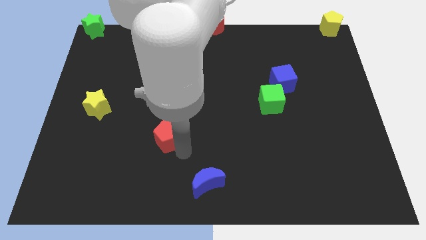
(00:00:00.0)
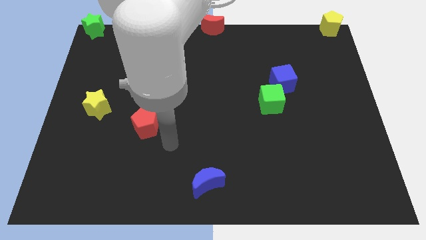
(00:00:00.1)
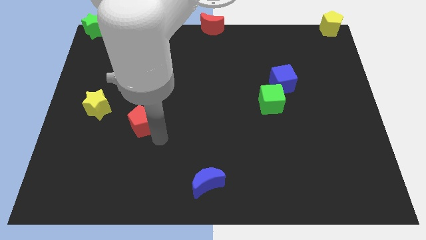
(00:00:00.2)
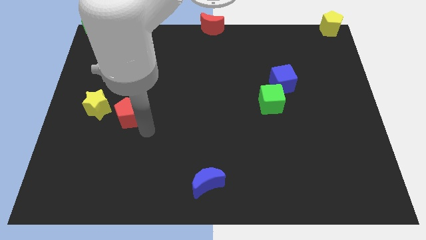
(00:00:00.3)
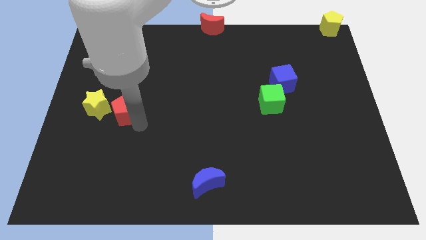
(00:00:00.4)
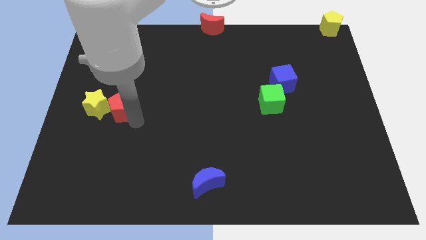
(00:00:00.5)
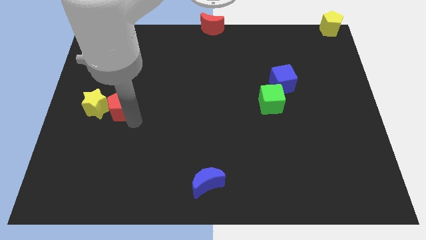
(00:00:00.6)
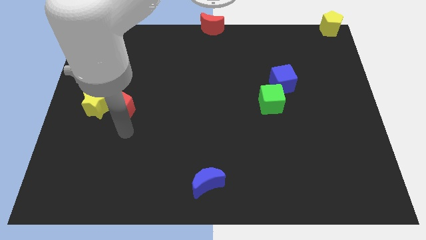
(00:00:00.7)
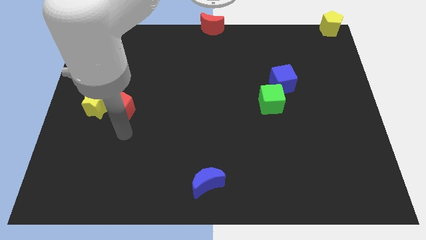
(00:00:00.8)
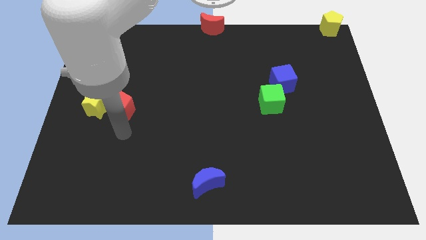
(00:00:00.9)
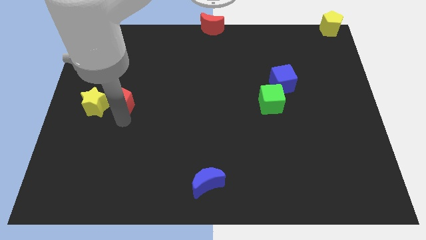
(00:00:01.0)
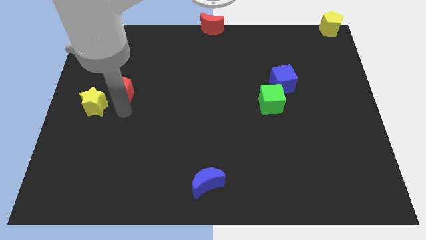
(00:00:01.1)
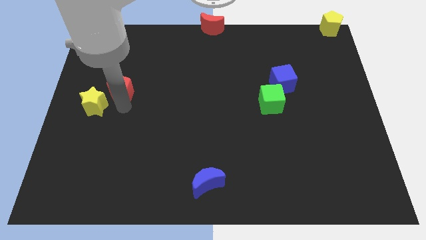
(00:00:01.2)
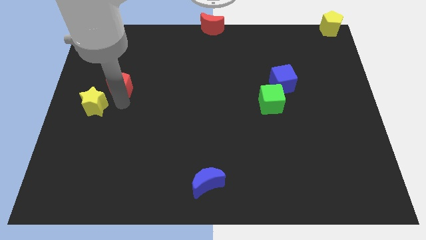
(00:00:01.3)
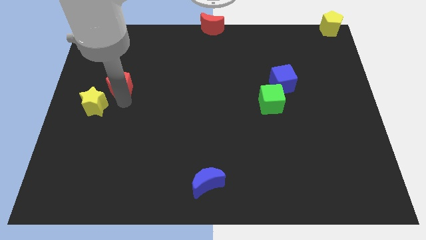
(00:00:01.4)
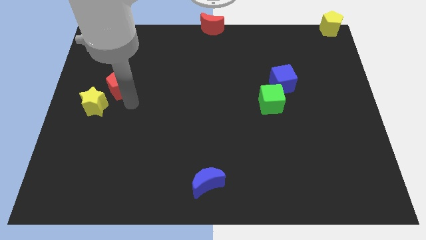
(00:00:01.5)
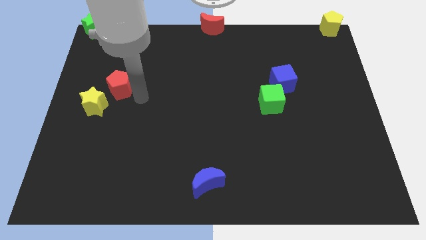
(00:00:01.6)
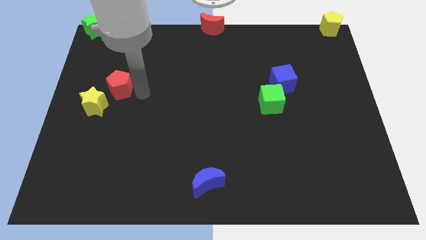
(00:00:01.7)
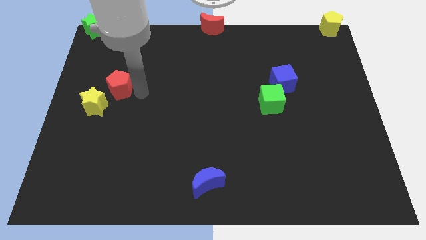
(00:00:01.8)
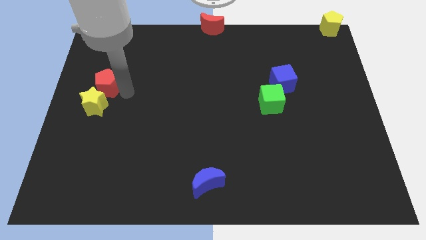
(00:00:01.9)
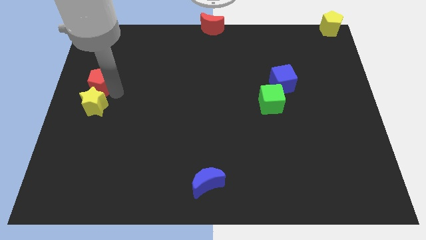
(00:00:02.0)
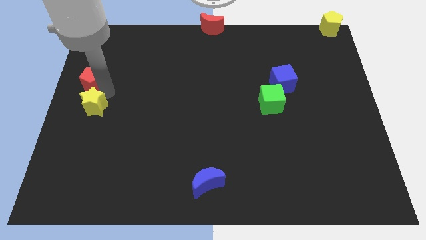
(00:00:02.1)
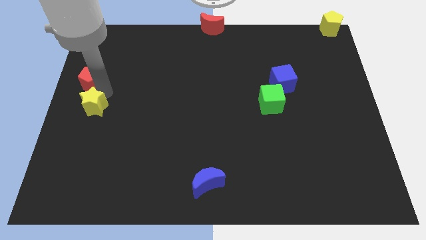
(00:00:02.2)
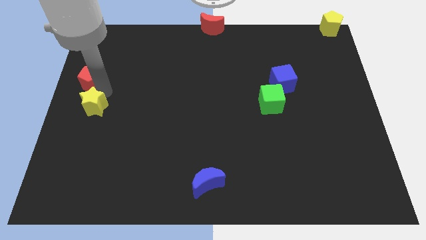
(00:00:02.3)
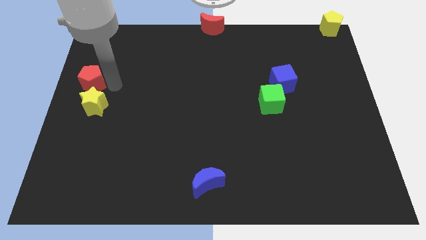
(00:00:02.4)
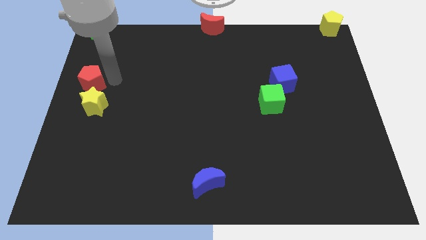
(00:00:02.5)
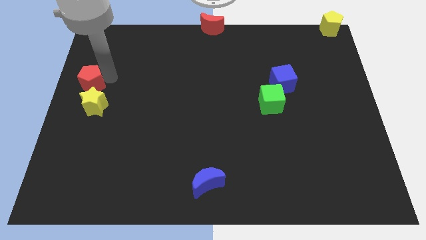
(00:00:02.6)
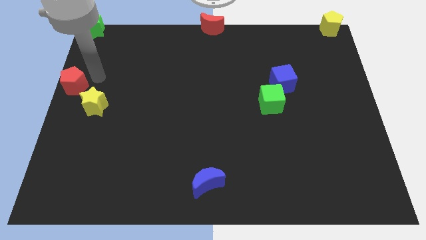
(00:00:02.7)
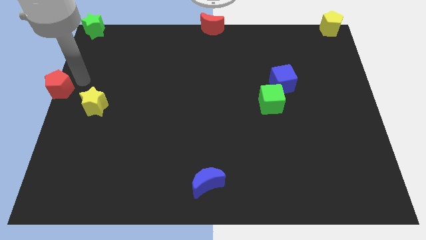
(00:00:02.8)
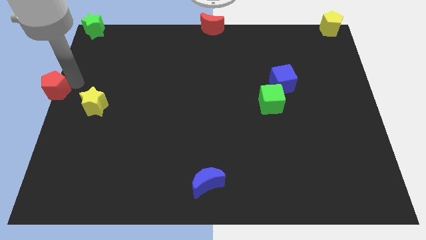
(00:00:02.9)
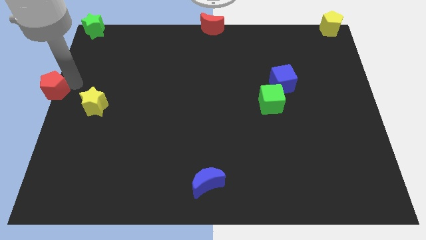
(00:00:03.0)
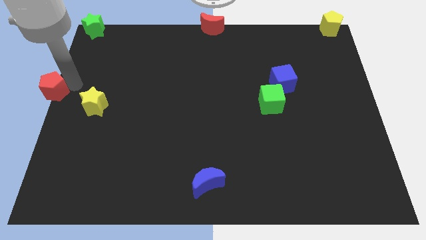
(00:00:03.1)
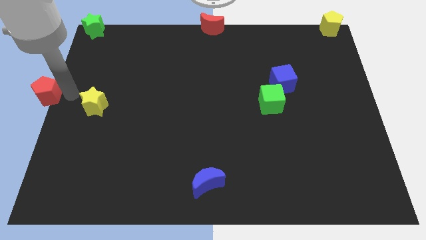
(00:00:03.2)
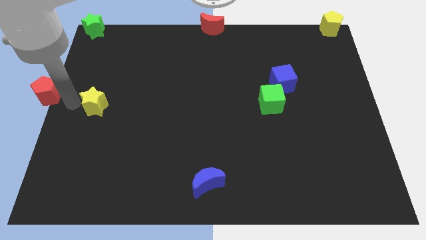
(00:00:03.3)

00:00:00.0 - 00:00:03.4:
place the red pentagon towards the left center of the board

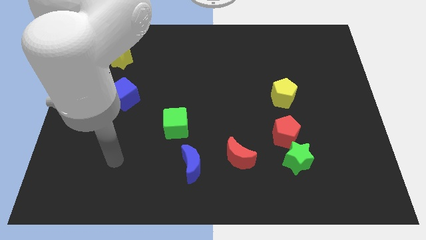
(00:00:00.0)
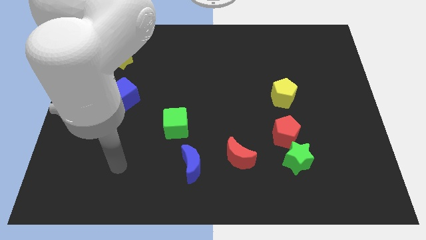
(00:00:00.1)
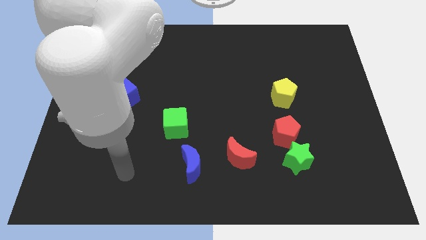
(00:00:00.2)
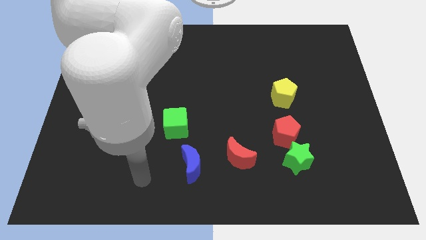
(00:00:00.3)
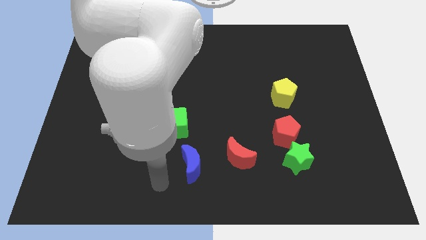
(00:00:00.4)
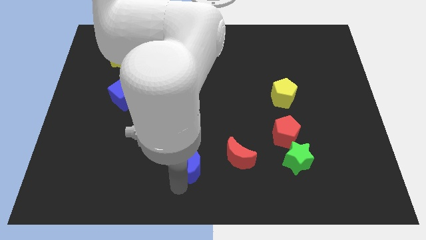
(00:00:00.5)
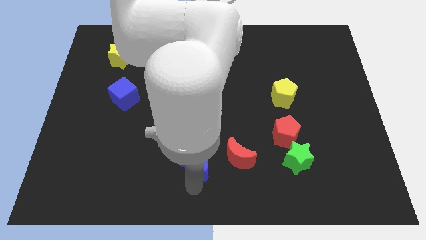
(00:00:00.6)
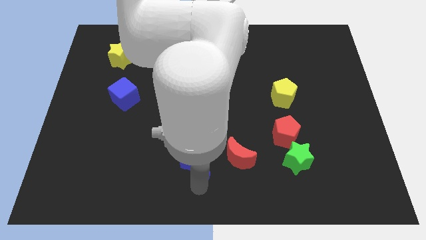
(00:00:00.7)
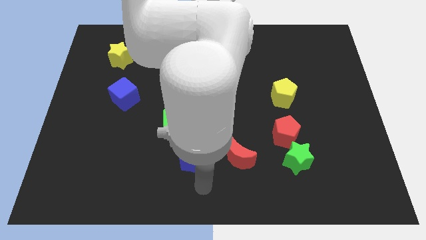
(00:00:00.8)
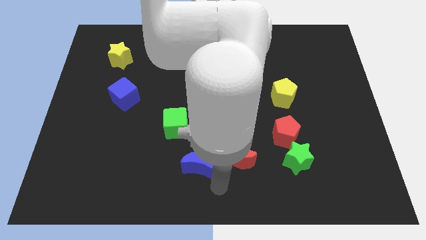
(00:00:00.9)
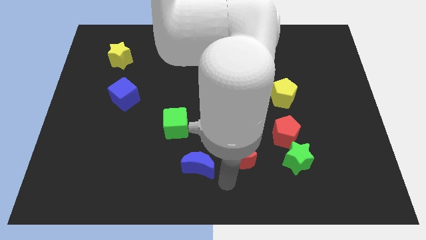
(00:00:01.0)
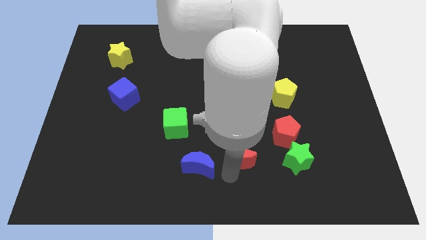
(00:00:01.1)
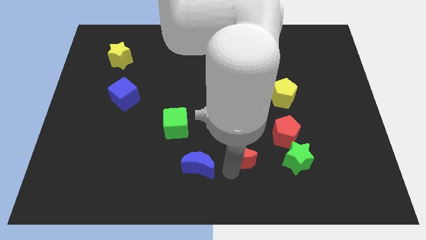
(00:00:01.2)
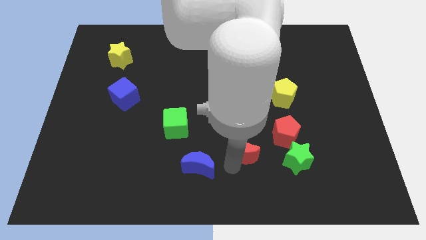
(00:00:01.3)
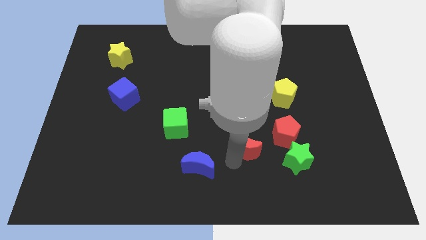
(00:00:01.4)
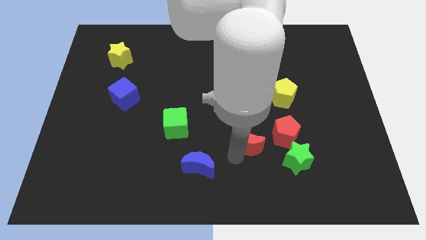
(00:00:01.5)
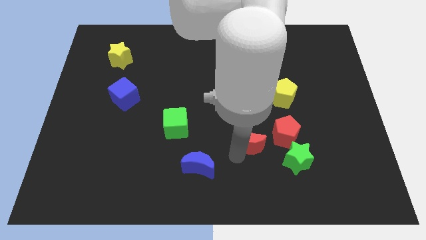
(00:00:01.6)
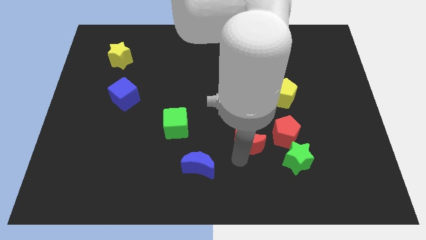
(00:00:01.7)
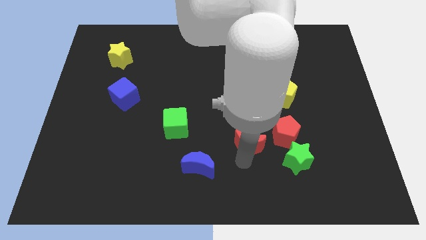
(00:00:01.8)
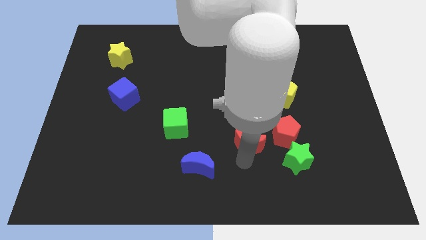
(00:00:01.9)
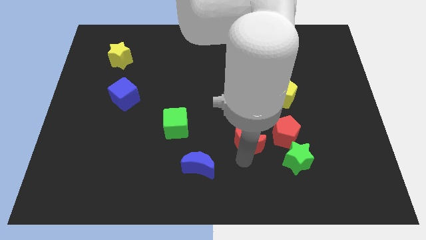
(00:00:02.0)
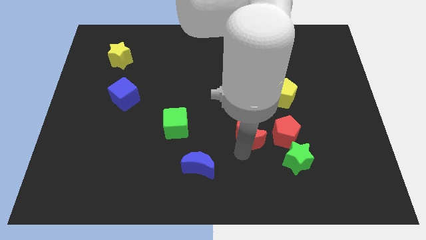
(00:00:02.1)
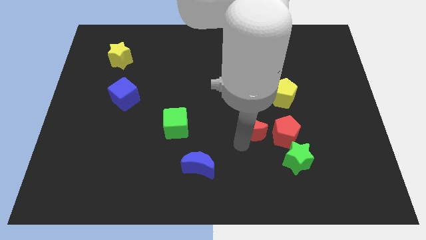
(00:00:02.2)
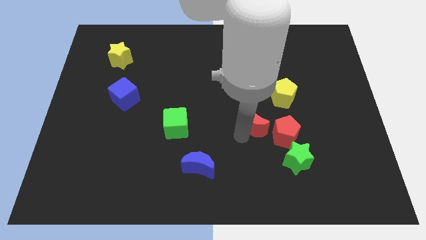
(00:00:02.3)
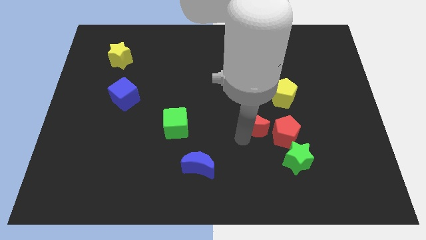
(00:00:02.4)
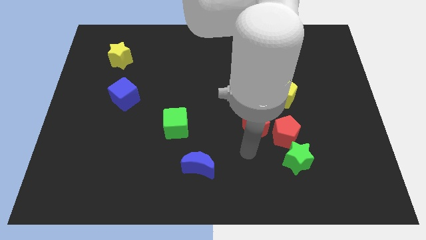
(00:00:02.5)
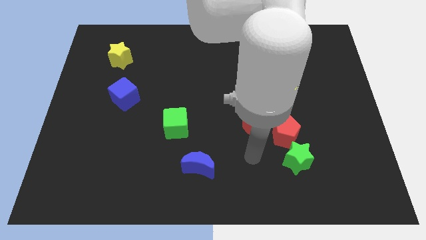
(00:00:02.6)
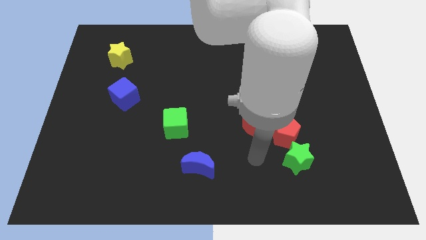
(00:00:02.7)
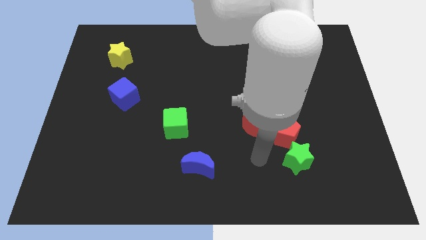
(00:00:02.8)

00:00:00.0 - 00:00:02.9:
place the red moon left to the red pentagon

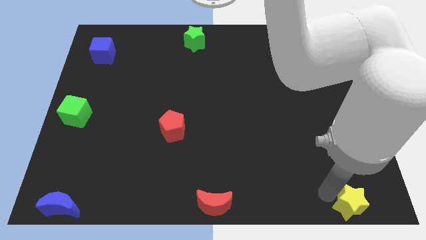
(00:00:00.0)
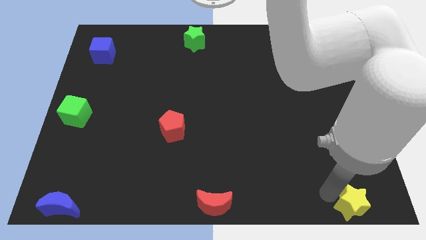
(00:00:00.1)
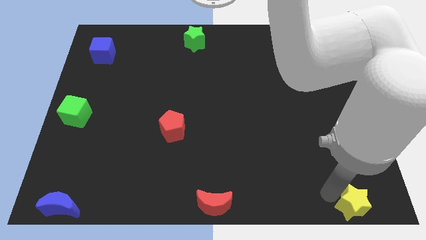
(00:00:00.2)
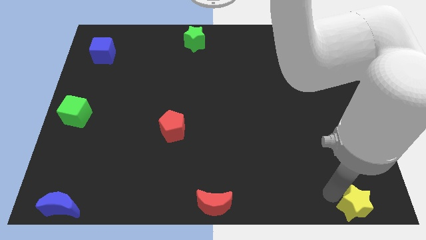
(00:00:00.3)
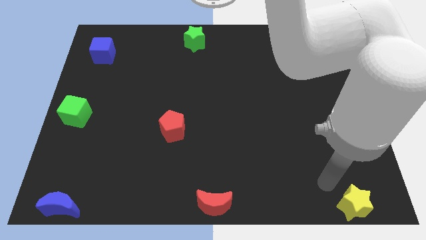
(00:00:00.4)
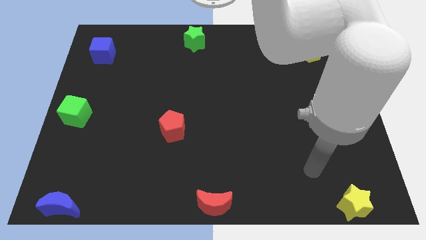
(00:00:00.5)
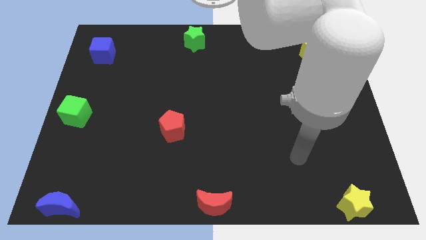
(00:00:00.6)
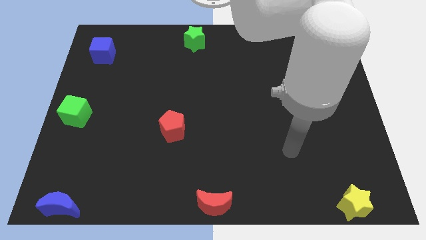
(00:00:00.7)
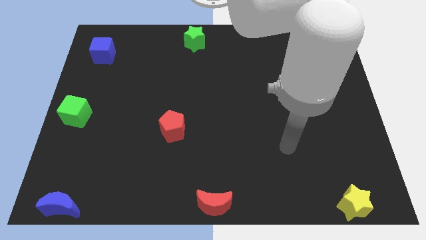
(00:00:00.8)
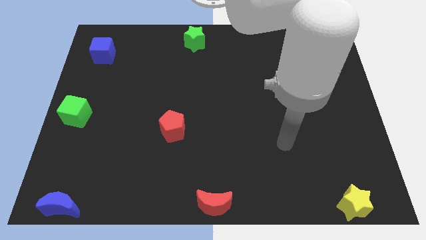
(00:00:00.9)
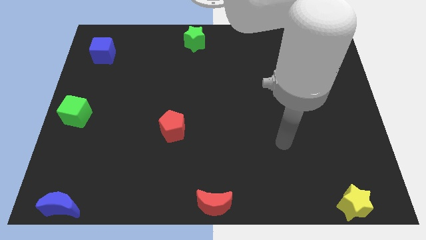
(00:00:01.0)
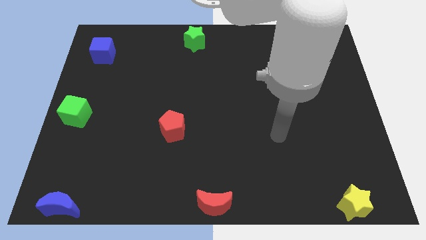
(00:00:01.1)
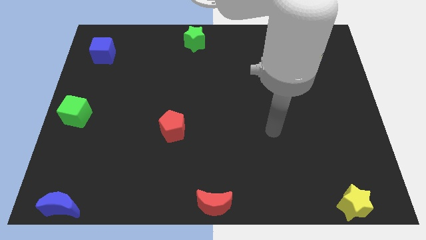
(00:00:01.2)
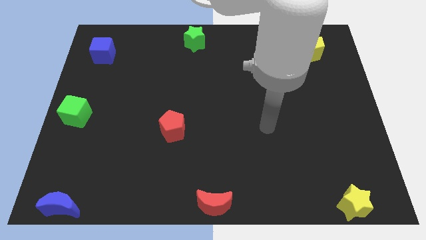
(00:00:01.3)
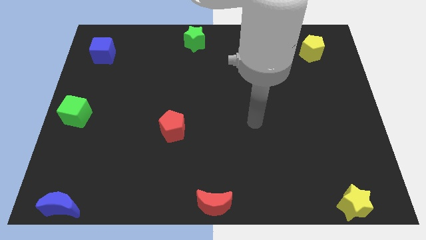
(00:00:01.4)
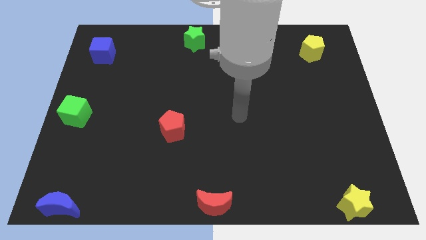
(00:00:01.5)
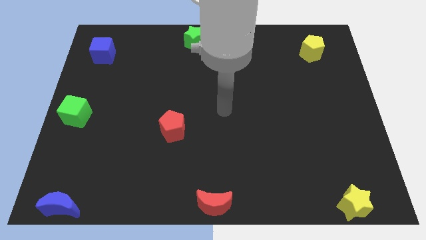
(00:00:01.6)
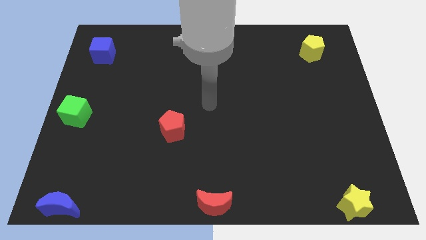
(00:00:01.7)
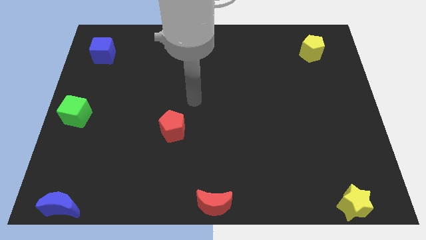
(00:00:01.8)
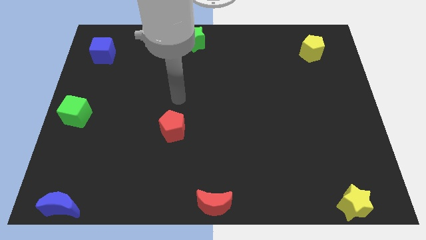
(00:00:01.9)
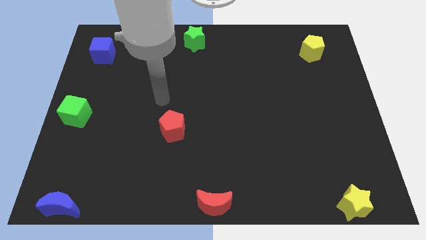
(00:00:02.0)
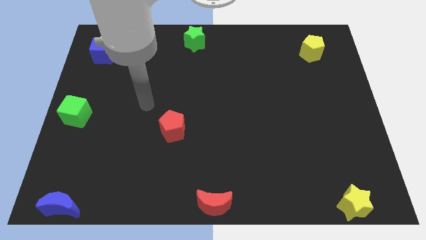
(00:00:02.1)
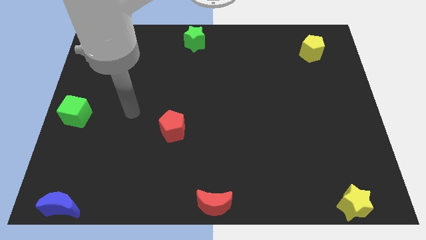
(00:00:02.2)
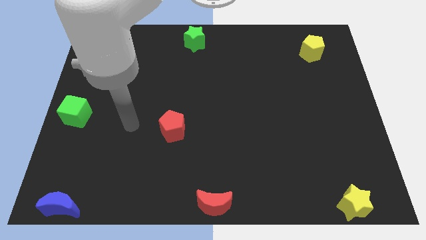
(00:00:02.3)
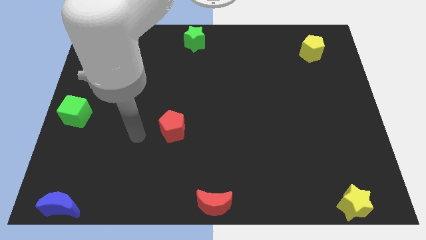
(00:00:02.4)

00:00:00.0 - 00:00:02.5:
push the yellow star to the right bottom

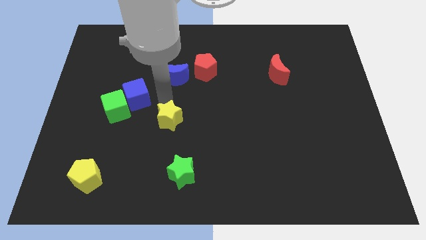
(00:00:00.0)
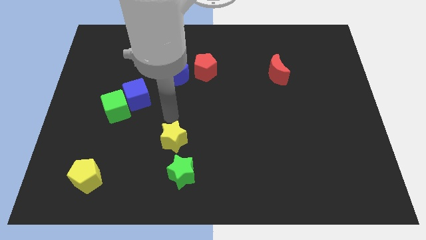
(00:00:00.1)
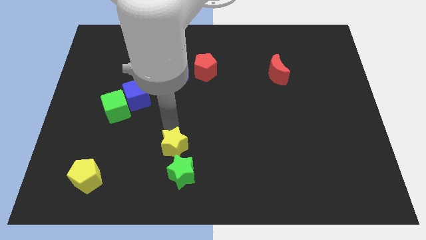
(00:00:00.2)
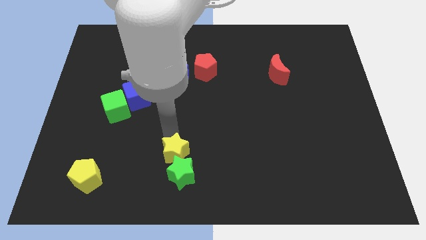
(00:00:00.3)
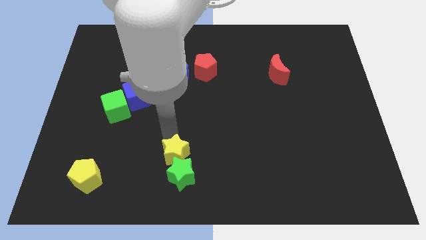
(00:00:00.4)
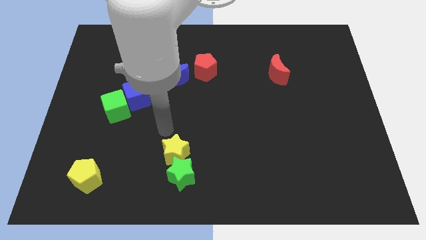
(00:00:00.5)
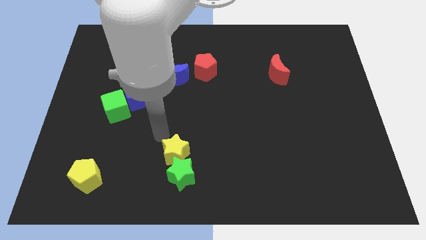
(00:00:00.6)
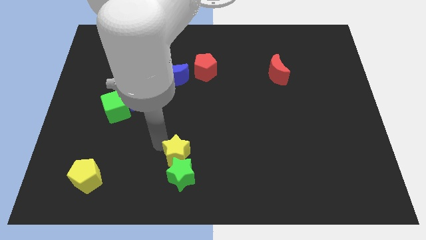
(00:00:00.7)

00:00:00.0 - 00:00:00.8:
push the yellow star into the top side of the green star
